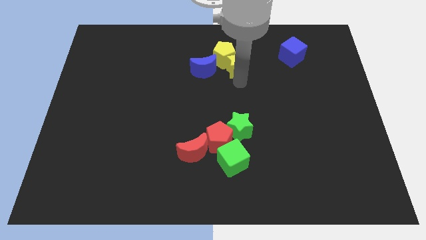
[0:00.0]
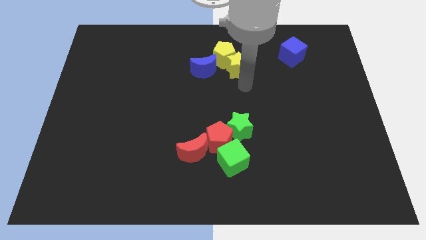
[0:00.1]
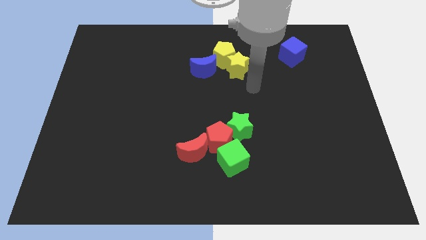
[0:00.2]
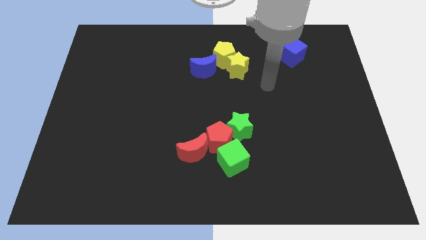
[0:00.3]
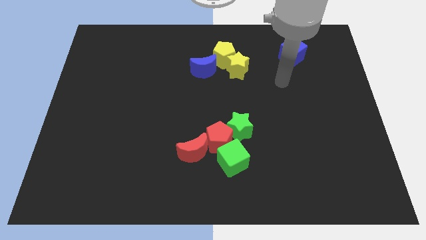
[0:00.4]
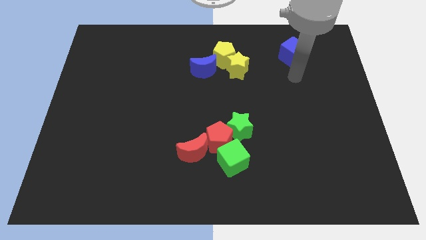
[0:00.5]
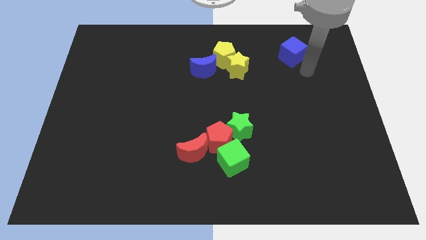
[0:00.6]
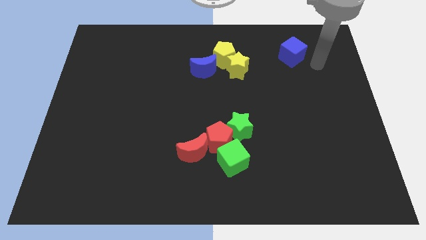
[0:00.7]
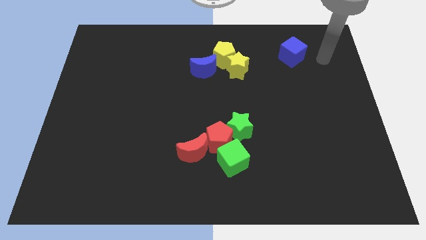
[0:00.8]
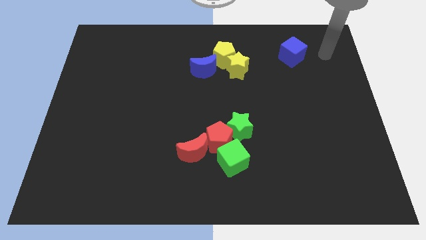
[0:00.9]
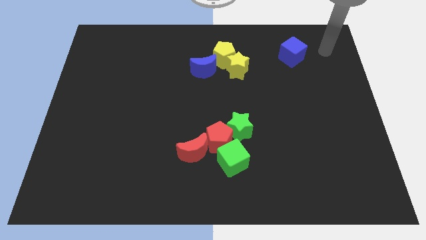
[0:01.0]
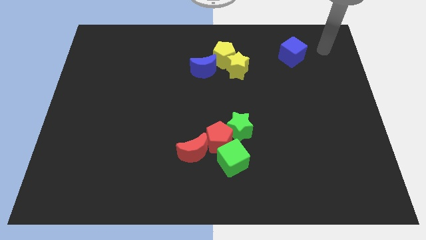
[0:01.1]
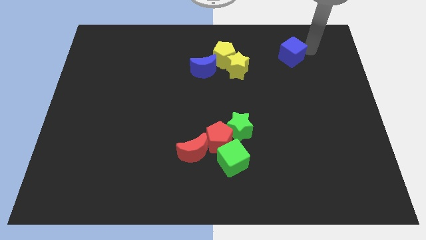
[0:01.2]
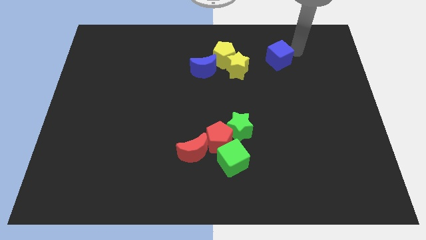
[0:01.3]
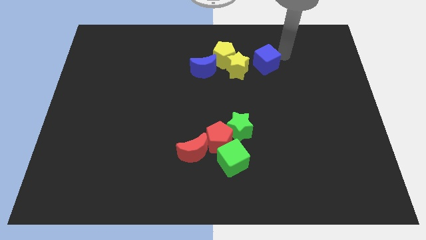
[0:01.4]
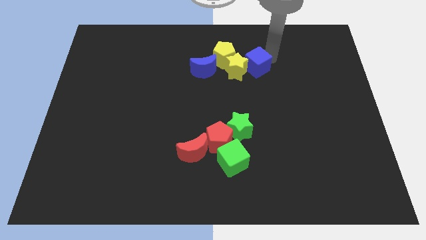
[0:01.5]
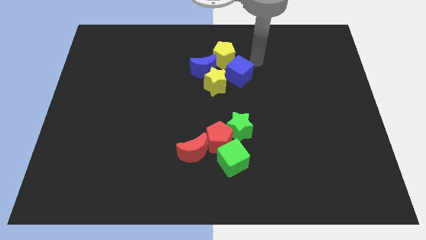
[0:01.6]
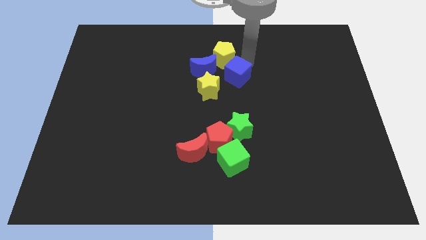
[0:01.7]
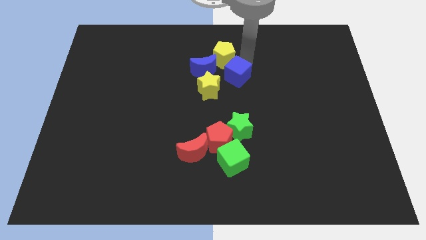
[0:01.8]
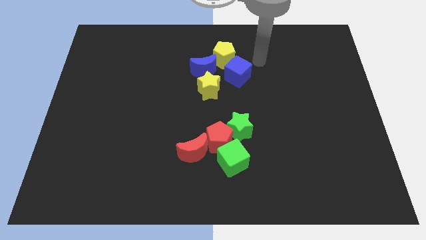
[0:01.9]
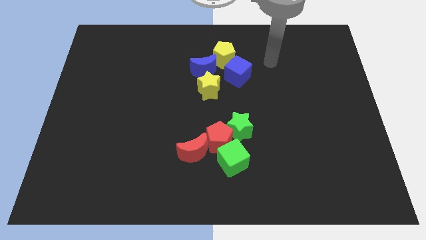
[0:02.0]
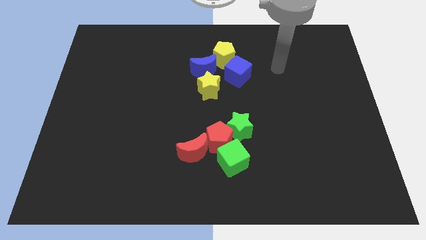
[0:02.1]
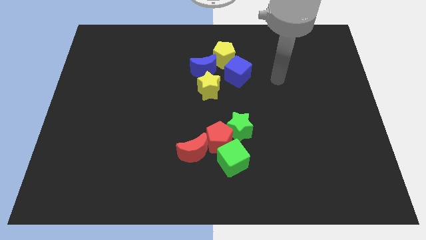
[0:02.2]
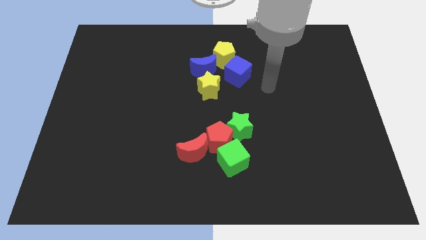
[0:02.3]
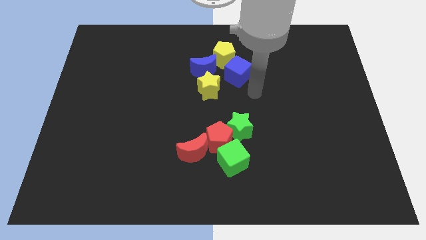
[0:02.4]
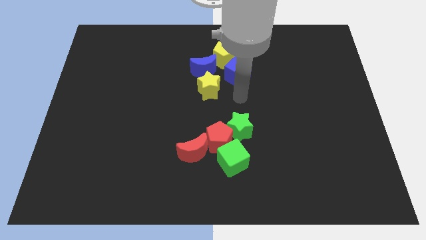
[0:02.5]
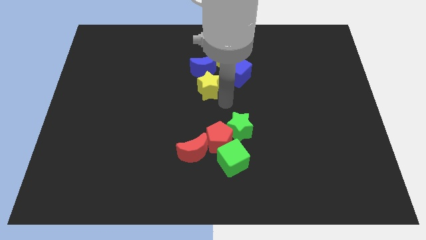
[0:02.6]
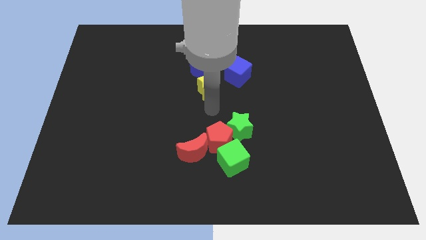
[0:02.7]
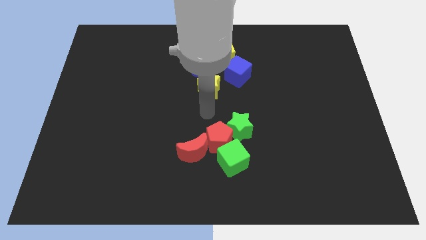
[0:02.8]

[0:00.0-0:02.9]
place the blue cube at the bottom right side of the yellow pentagon

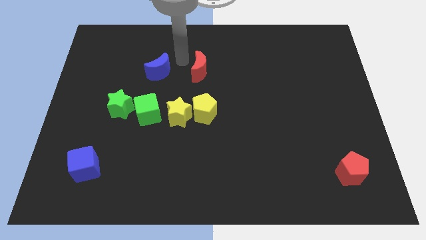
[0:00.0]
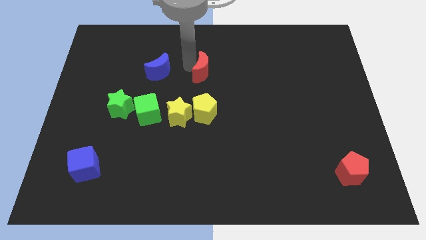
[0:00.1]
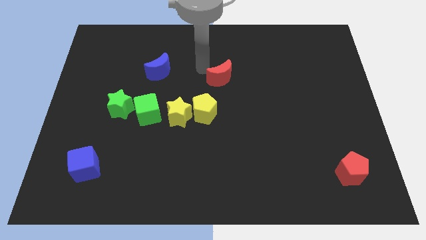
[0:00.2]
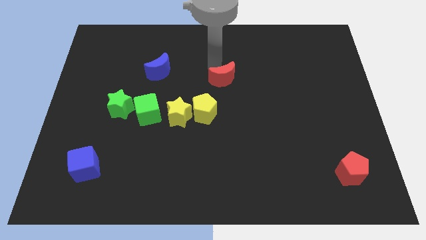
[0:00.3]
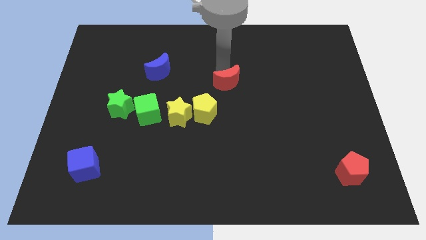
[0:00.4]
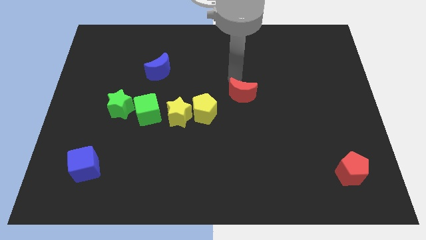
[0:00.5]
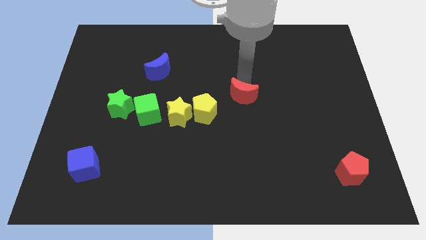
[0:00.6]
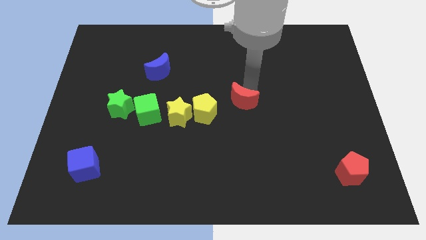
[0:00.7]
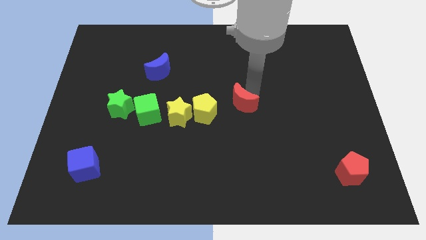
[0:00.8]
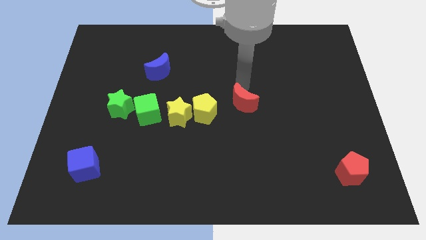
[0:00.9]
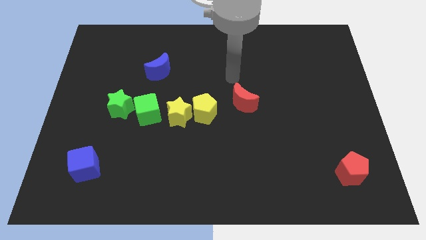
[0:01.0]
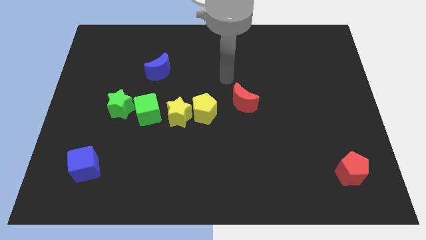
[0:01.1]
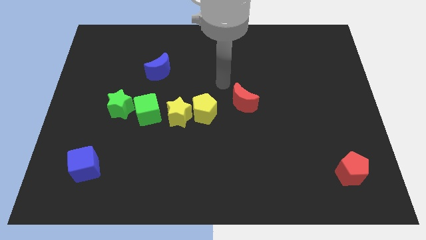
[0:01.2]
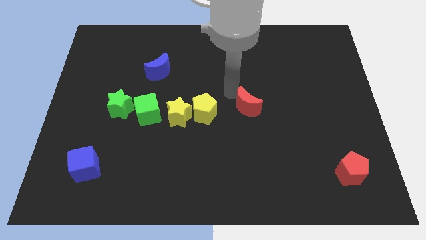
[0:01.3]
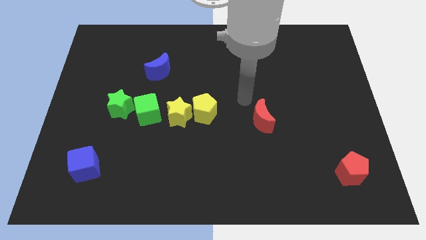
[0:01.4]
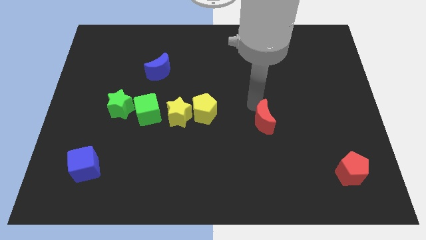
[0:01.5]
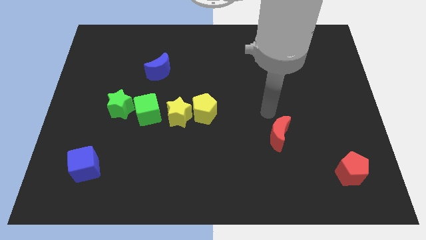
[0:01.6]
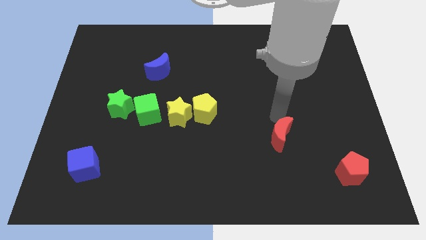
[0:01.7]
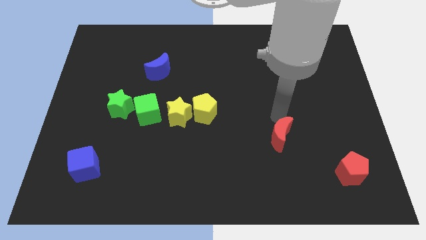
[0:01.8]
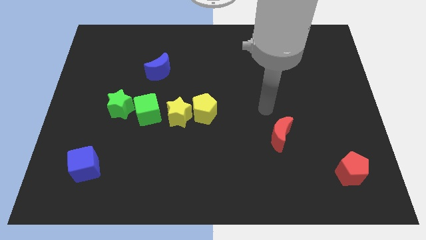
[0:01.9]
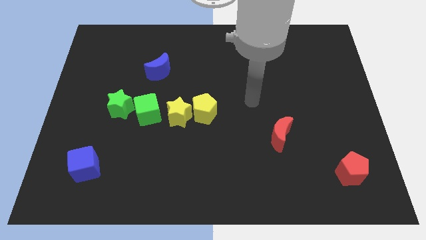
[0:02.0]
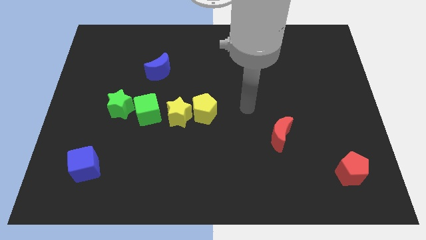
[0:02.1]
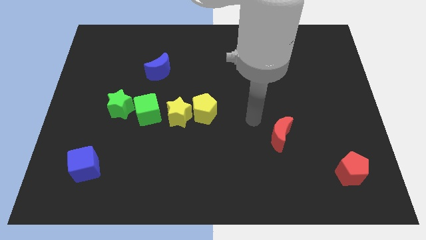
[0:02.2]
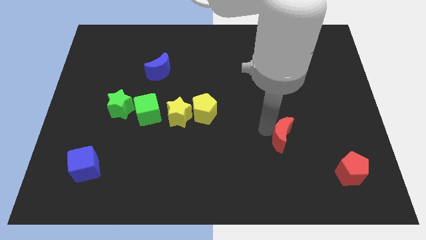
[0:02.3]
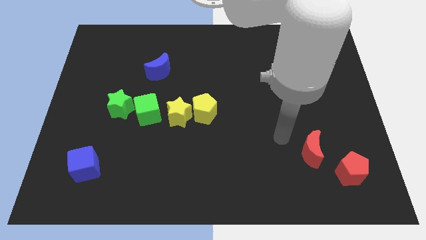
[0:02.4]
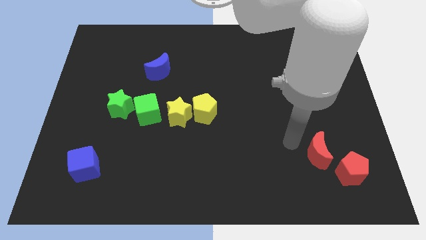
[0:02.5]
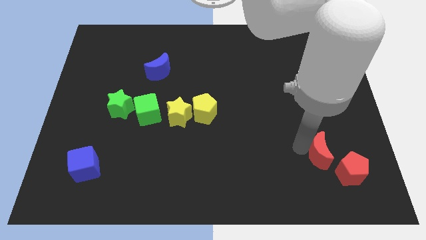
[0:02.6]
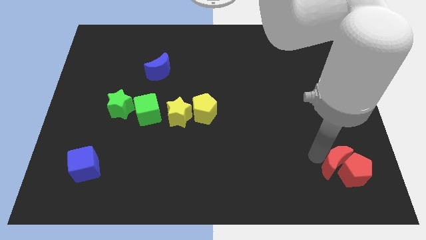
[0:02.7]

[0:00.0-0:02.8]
move the red crescent top left to the red pentagon

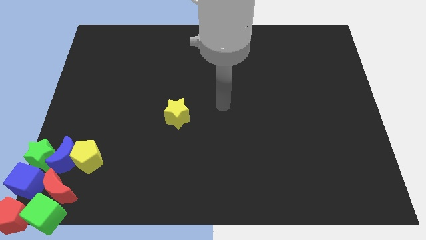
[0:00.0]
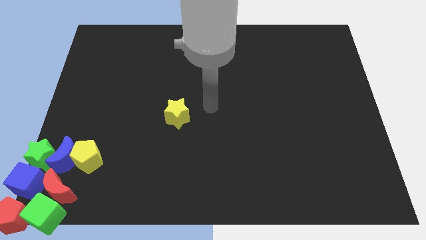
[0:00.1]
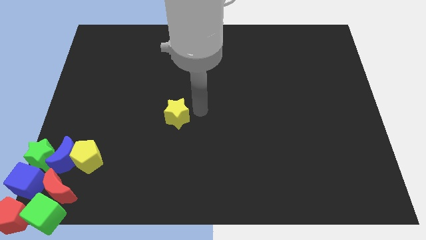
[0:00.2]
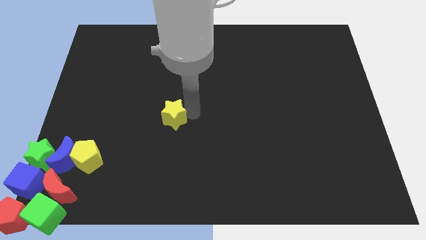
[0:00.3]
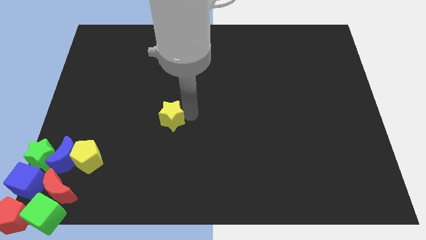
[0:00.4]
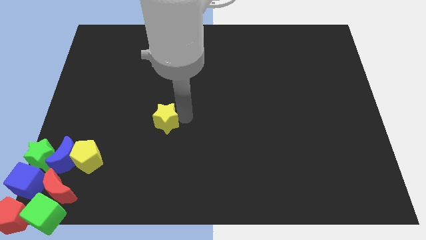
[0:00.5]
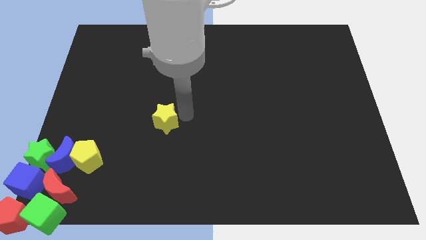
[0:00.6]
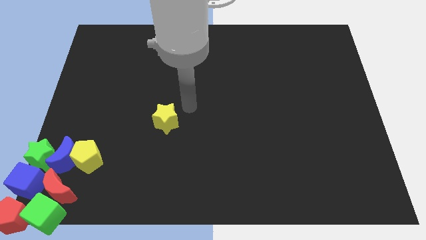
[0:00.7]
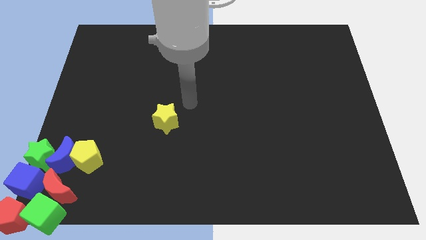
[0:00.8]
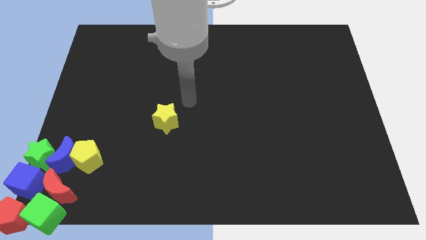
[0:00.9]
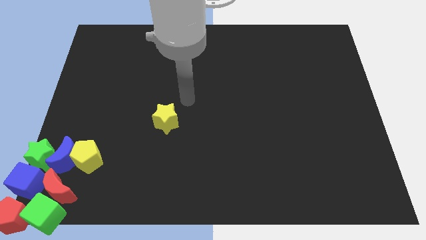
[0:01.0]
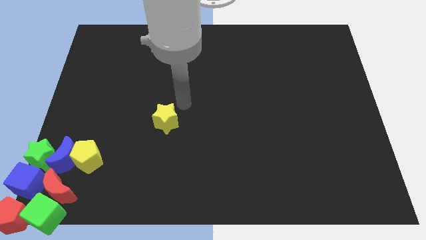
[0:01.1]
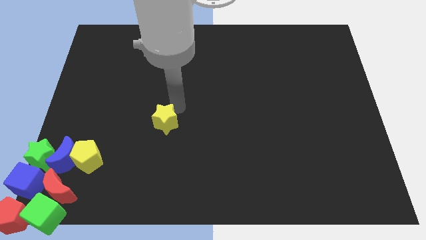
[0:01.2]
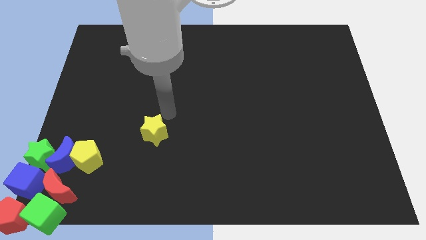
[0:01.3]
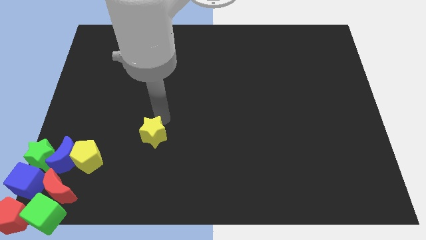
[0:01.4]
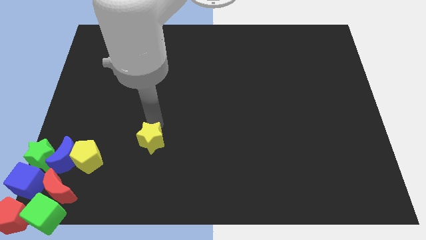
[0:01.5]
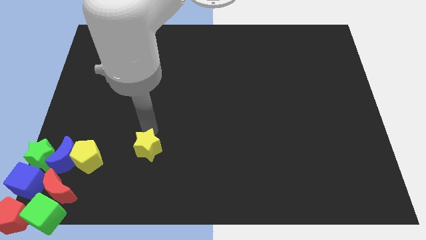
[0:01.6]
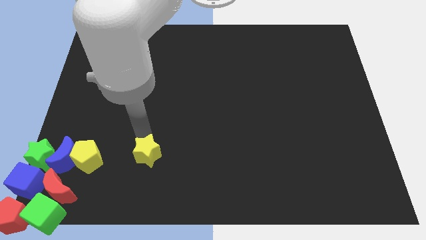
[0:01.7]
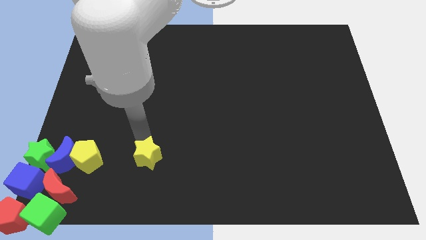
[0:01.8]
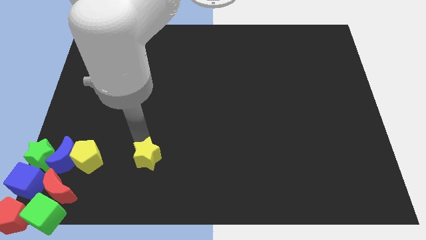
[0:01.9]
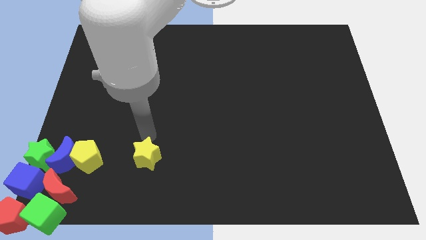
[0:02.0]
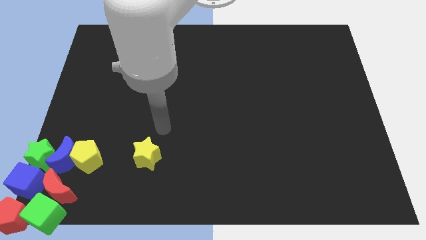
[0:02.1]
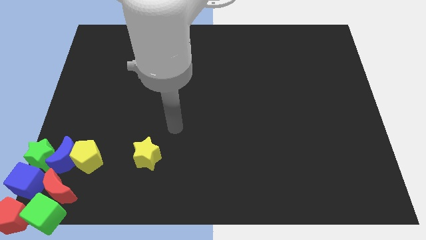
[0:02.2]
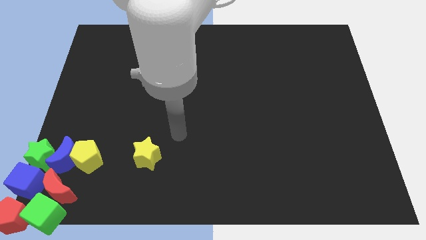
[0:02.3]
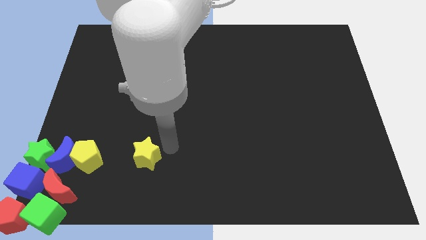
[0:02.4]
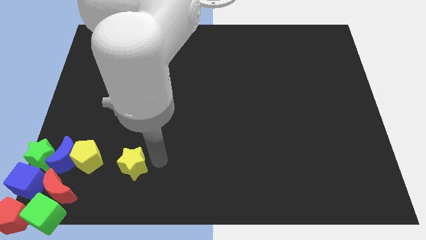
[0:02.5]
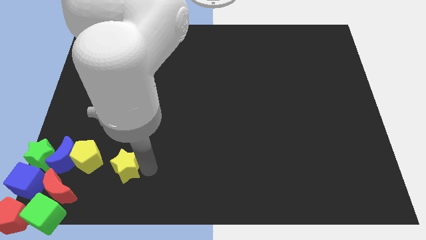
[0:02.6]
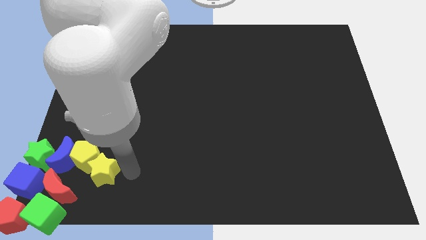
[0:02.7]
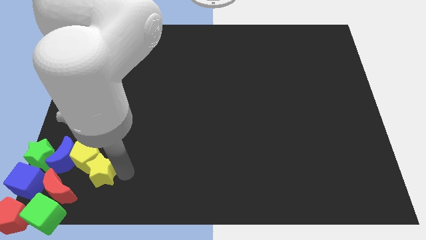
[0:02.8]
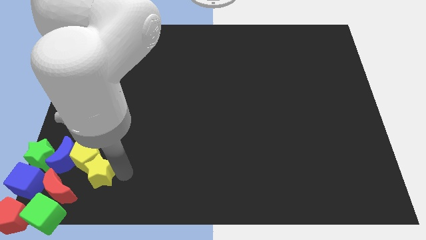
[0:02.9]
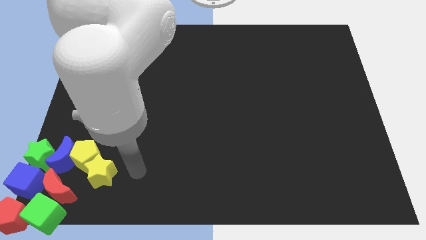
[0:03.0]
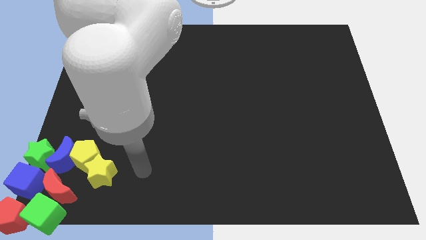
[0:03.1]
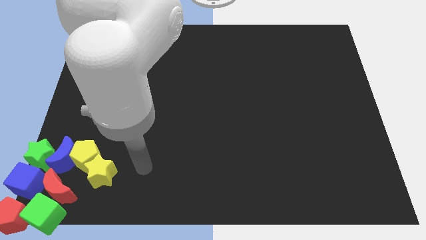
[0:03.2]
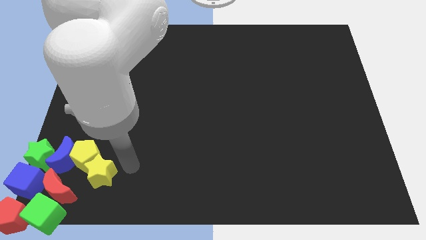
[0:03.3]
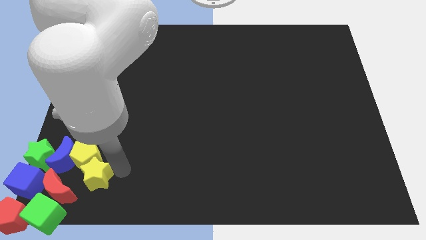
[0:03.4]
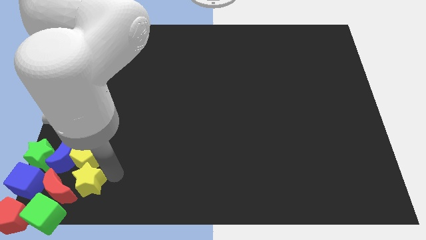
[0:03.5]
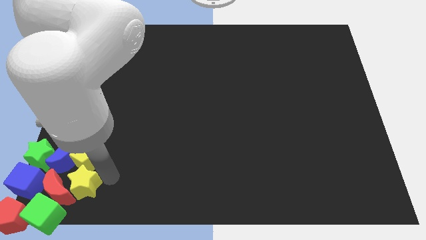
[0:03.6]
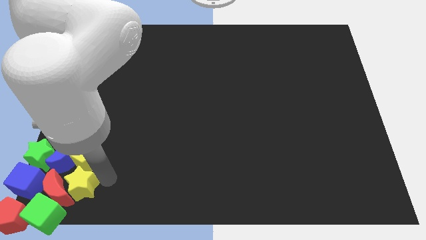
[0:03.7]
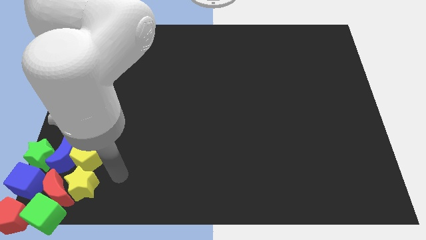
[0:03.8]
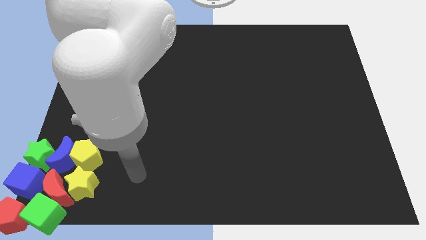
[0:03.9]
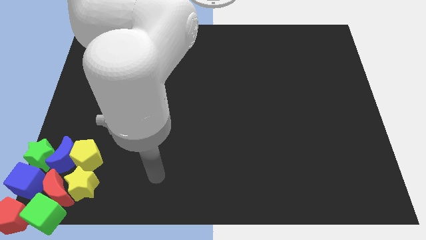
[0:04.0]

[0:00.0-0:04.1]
move the yellow star into the bottom of the yellow pentagon
